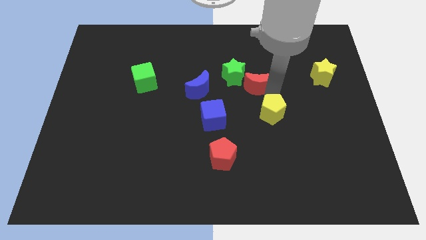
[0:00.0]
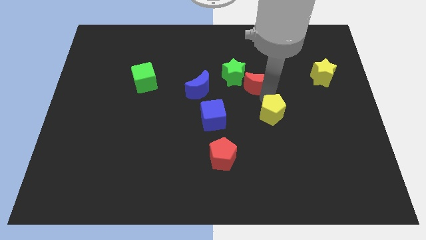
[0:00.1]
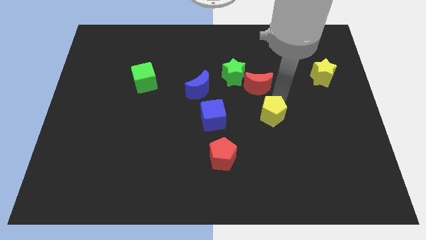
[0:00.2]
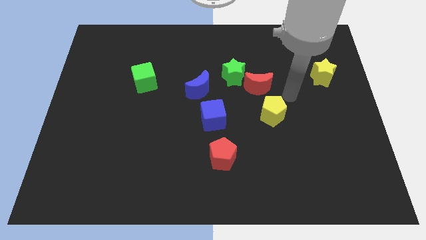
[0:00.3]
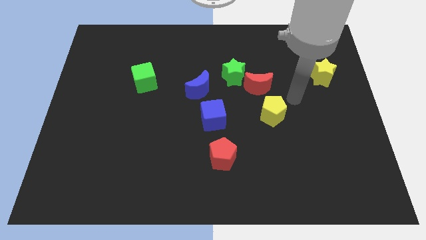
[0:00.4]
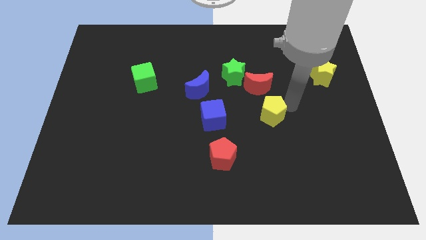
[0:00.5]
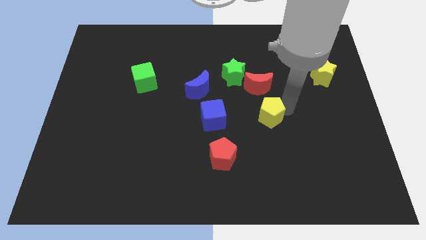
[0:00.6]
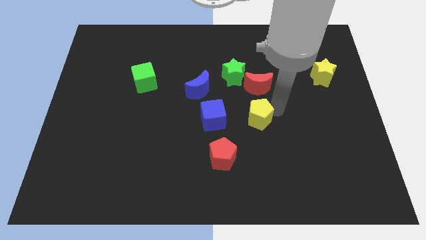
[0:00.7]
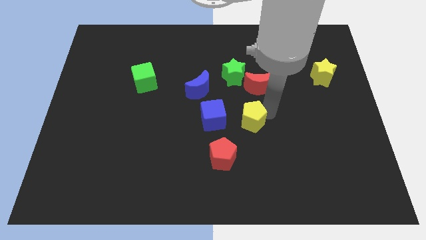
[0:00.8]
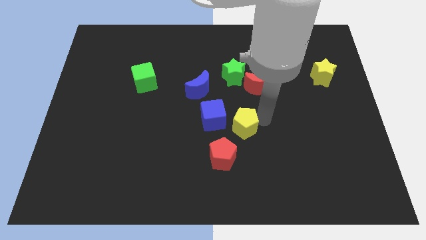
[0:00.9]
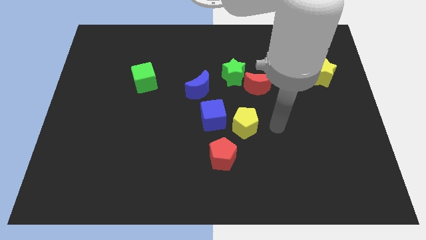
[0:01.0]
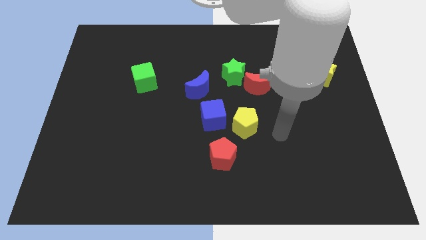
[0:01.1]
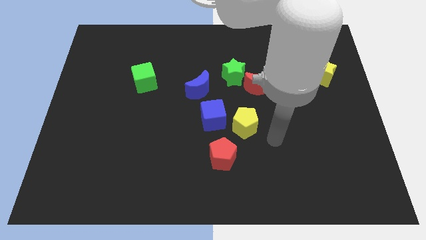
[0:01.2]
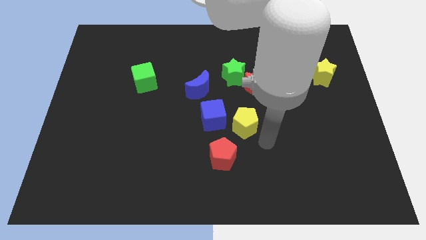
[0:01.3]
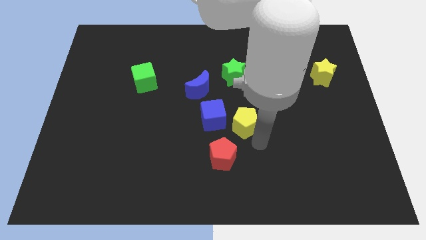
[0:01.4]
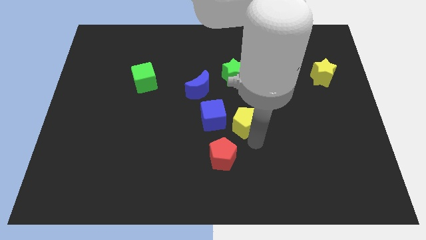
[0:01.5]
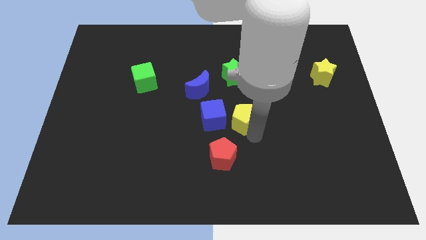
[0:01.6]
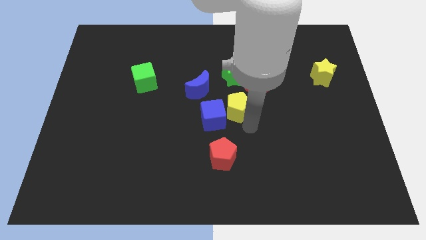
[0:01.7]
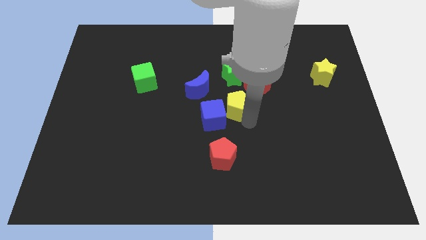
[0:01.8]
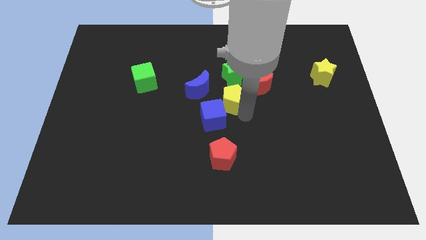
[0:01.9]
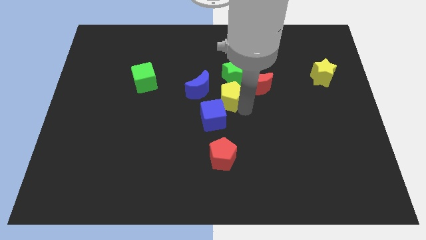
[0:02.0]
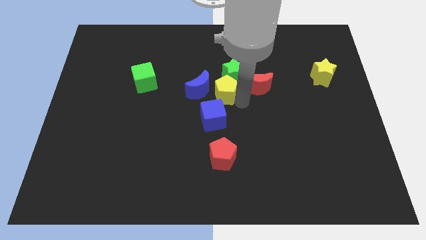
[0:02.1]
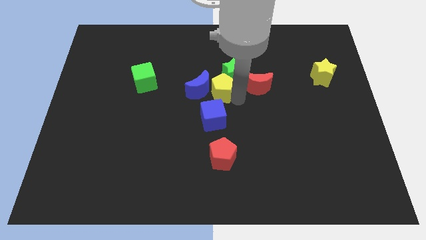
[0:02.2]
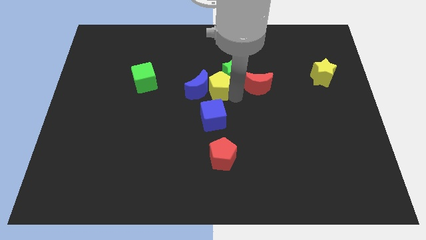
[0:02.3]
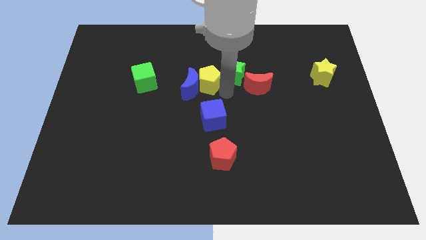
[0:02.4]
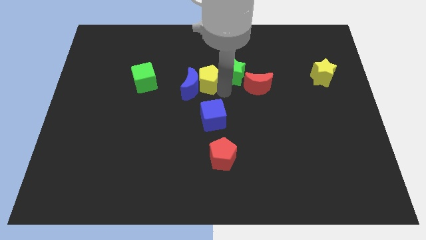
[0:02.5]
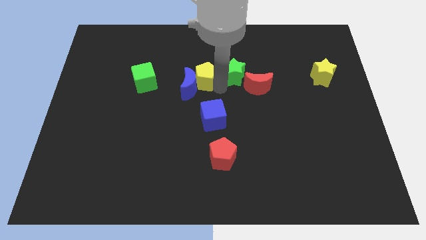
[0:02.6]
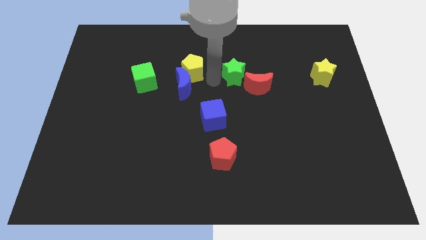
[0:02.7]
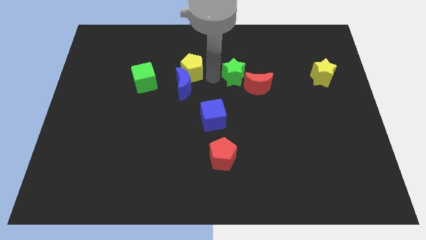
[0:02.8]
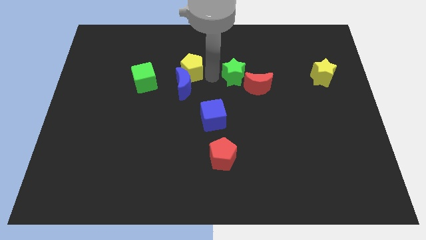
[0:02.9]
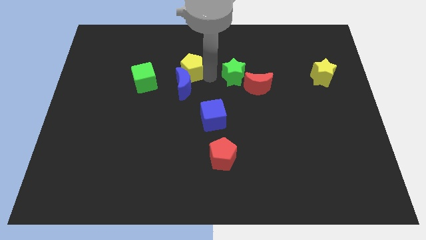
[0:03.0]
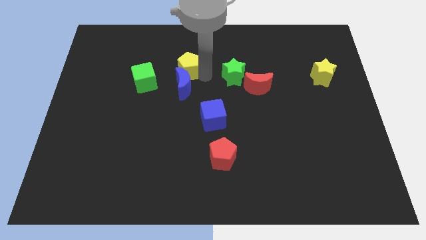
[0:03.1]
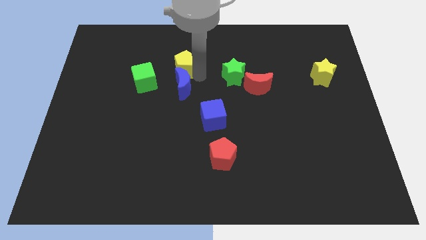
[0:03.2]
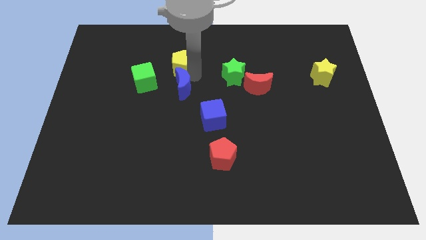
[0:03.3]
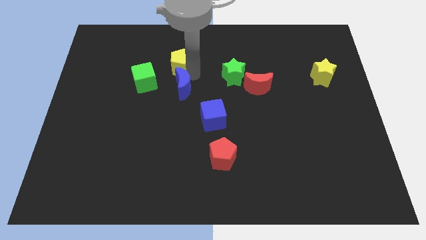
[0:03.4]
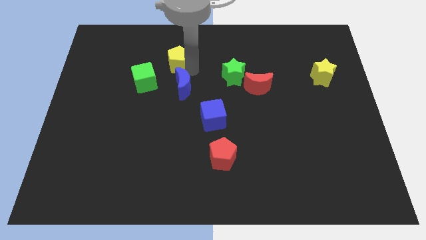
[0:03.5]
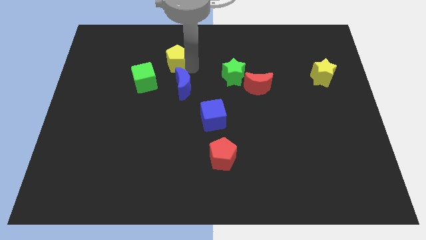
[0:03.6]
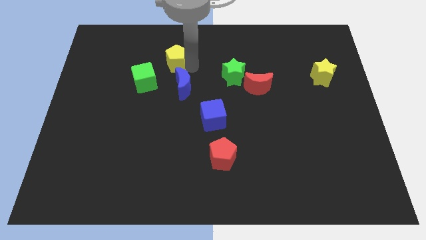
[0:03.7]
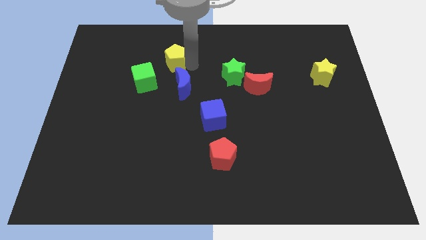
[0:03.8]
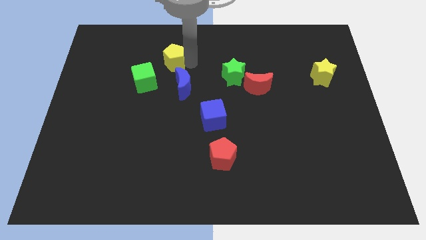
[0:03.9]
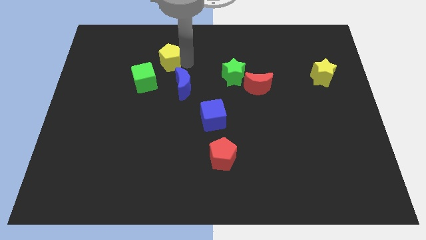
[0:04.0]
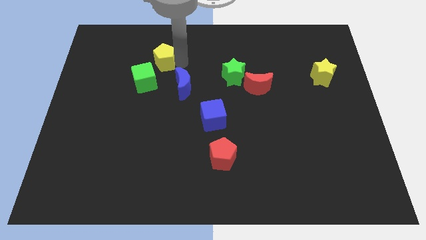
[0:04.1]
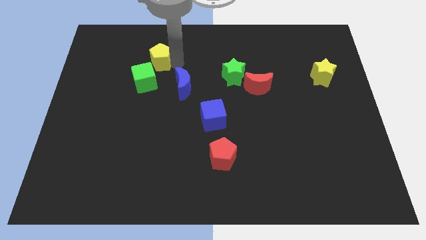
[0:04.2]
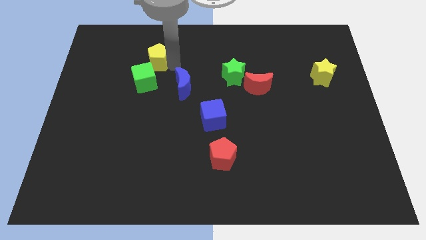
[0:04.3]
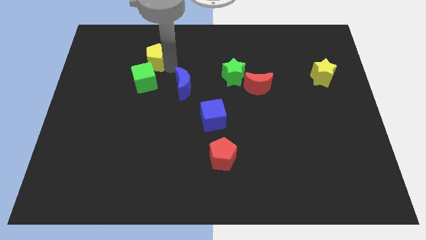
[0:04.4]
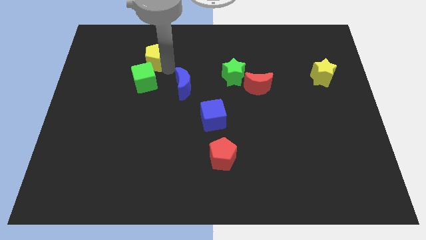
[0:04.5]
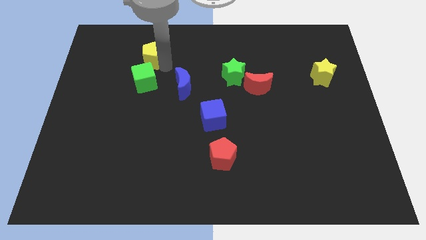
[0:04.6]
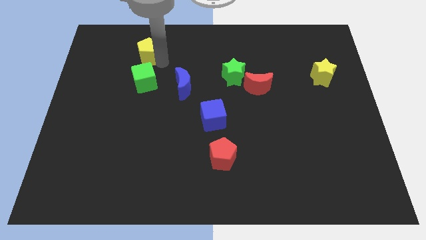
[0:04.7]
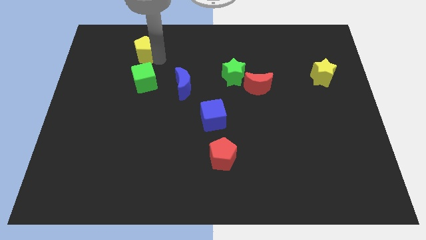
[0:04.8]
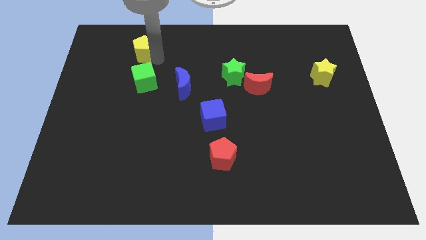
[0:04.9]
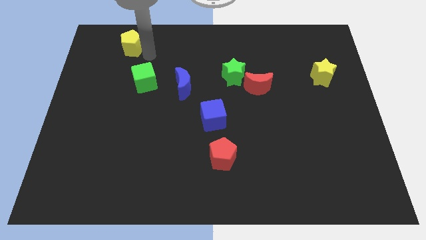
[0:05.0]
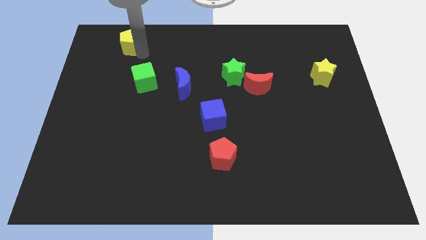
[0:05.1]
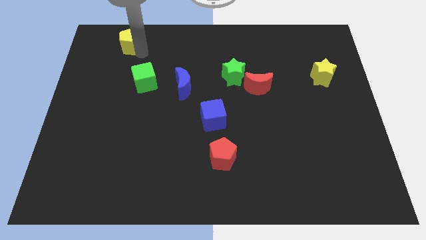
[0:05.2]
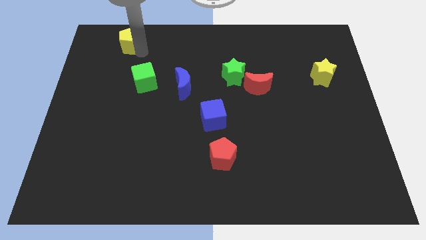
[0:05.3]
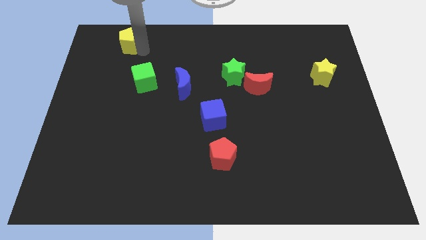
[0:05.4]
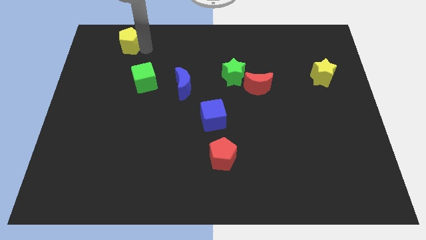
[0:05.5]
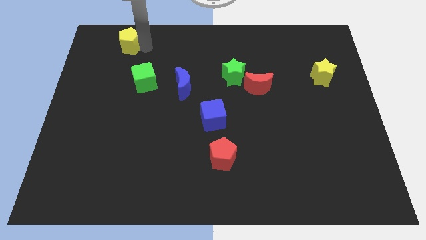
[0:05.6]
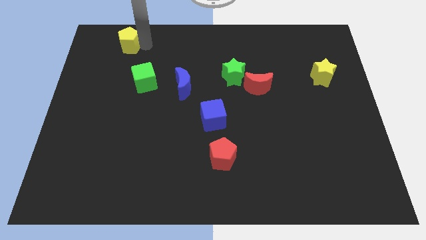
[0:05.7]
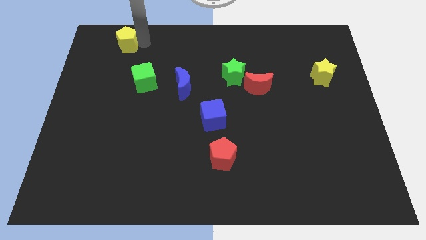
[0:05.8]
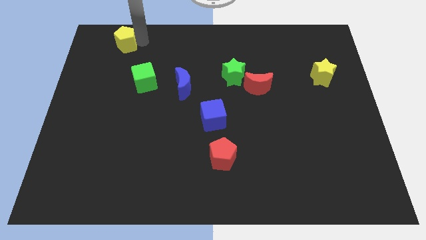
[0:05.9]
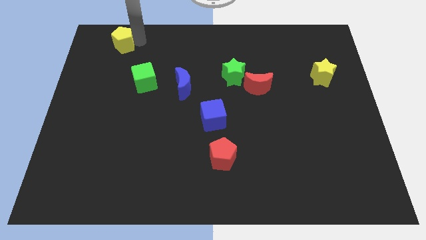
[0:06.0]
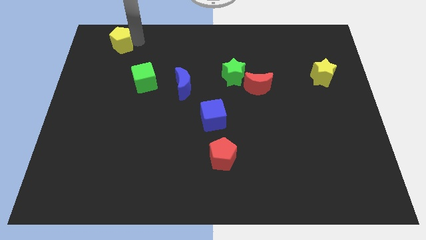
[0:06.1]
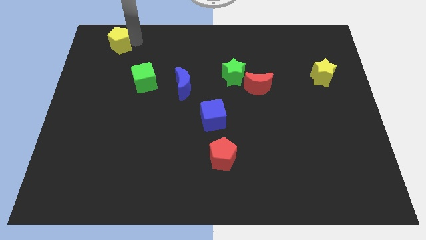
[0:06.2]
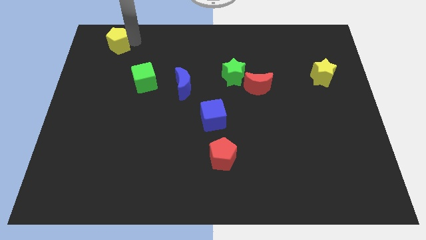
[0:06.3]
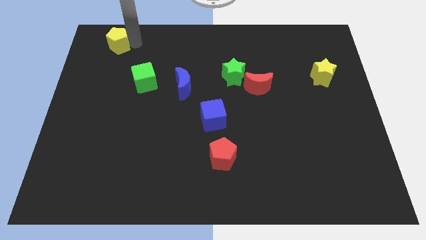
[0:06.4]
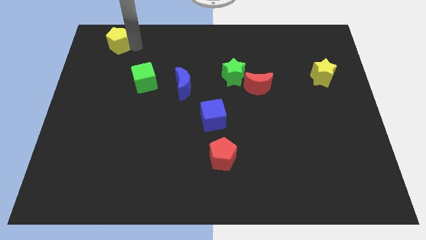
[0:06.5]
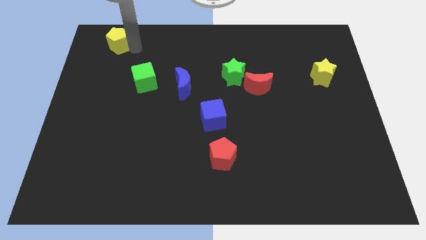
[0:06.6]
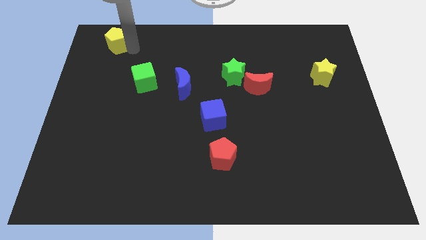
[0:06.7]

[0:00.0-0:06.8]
push the yellow pentagon towards the top left of the board

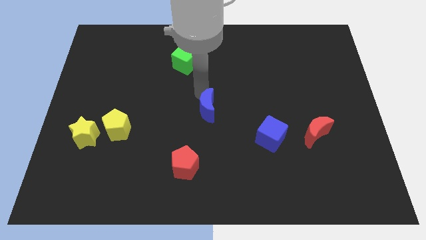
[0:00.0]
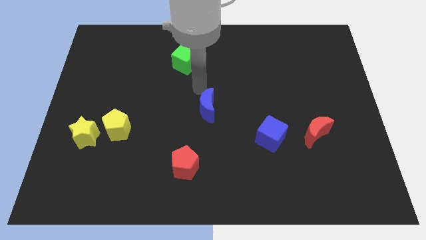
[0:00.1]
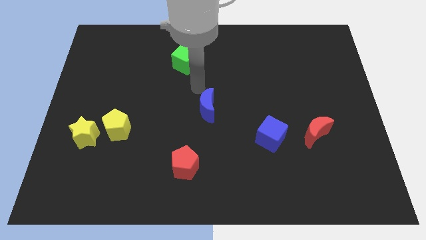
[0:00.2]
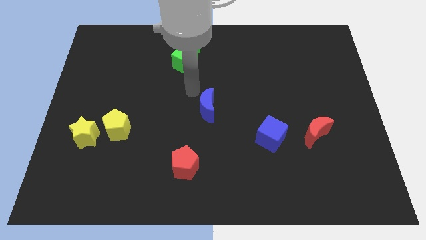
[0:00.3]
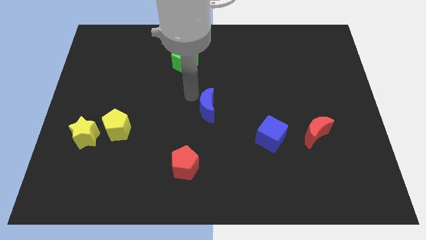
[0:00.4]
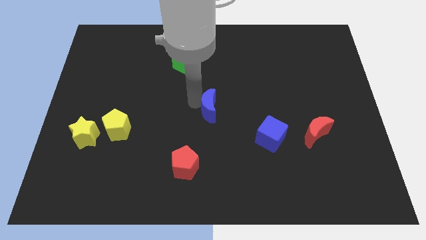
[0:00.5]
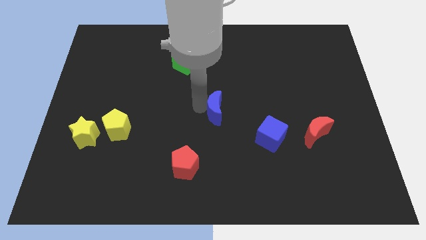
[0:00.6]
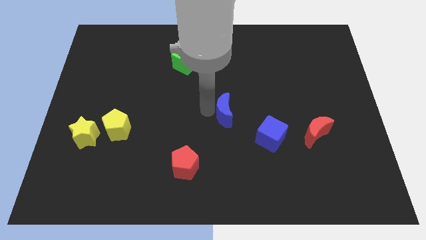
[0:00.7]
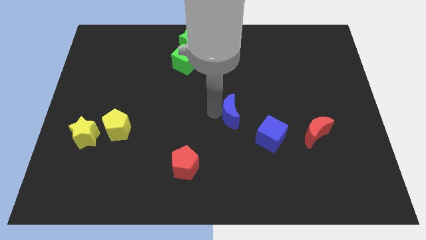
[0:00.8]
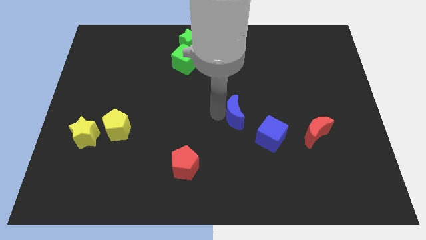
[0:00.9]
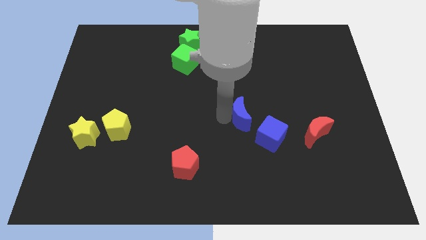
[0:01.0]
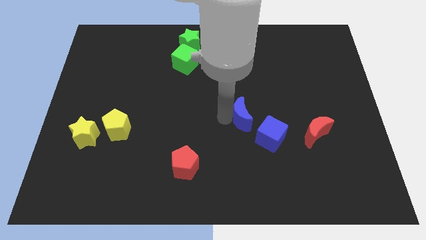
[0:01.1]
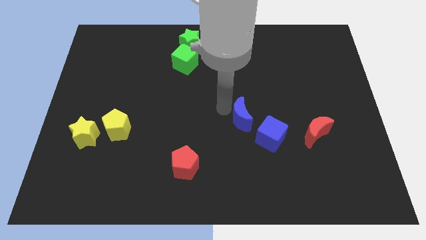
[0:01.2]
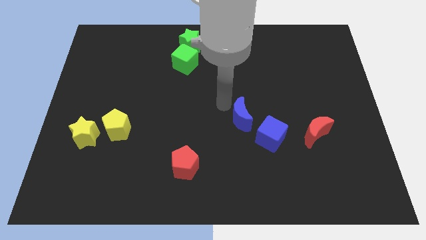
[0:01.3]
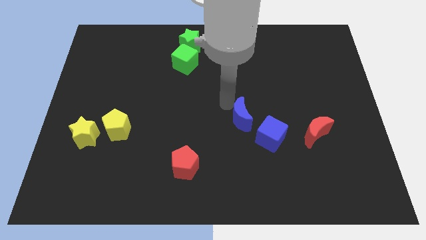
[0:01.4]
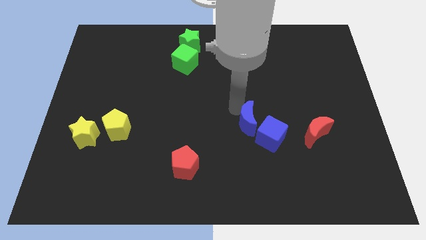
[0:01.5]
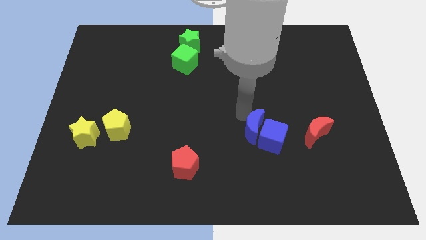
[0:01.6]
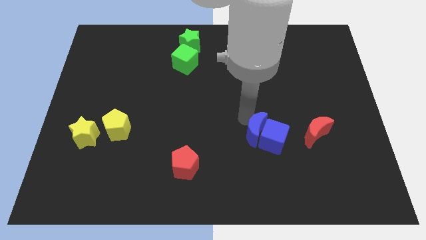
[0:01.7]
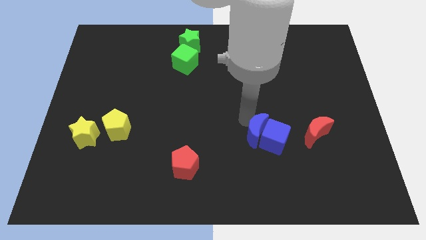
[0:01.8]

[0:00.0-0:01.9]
move the blue crescent to the left of the blue cube

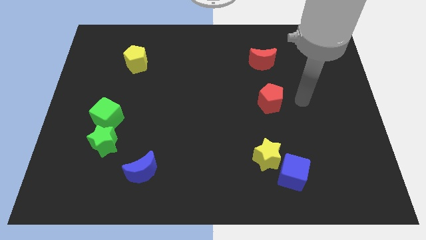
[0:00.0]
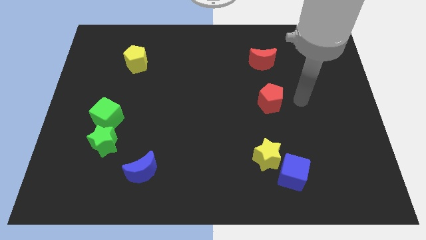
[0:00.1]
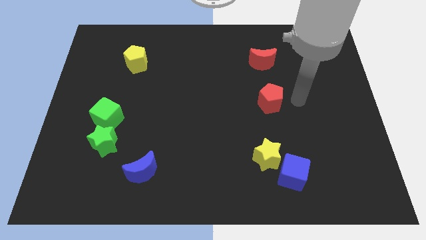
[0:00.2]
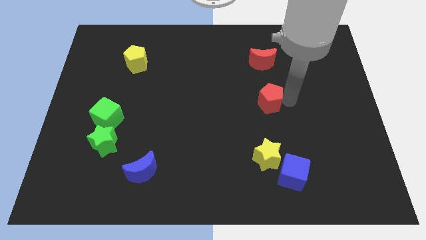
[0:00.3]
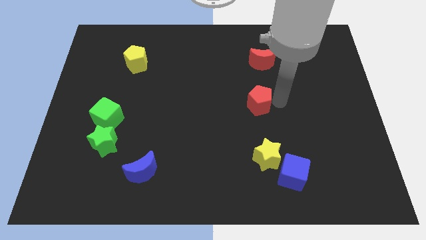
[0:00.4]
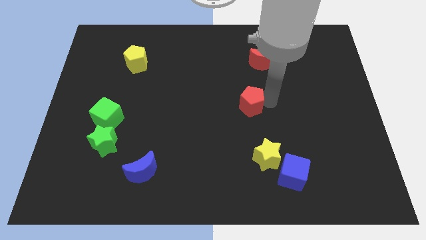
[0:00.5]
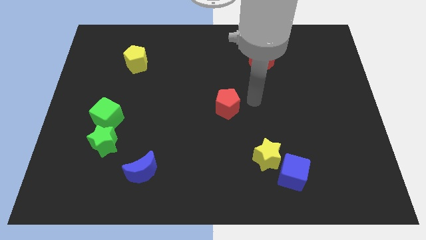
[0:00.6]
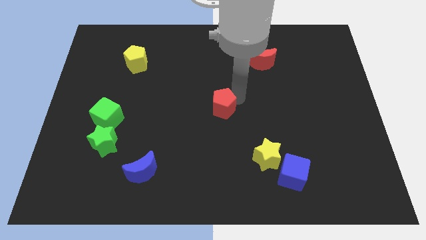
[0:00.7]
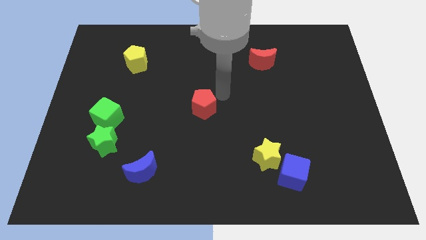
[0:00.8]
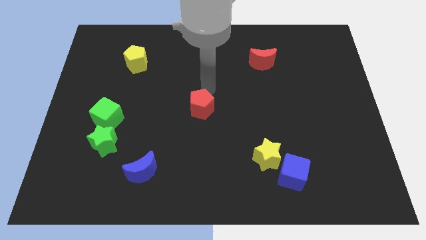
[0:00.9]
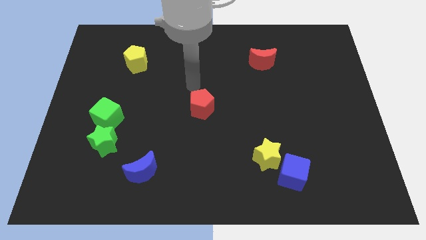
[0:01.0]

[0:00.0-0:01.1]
move the red pentagon to the center of the board
